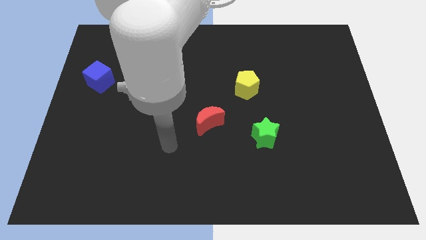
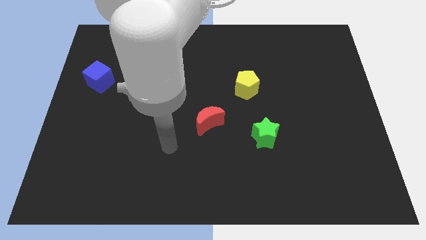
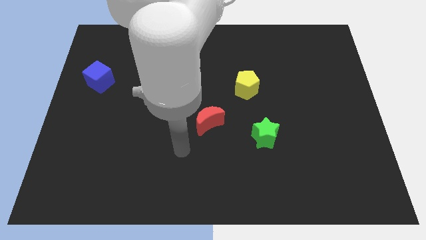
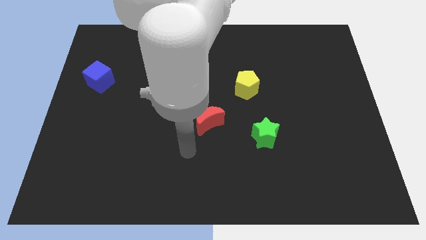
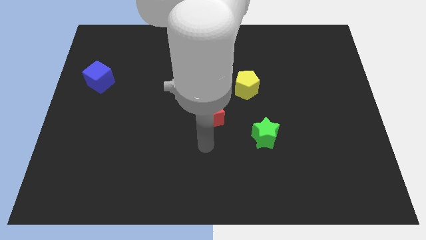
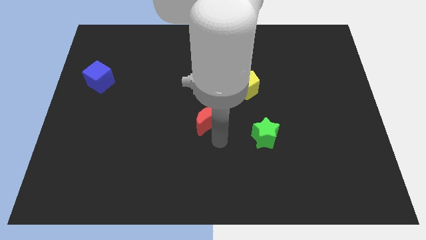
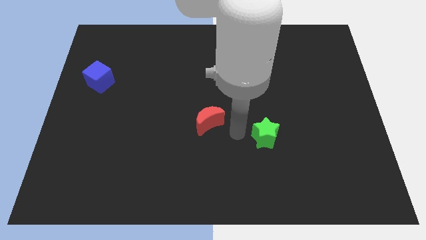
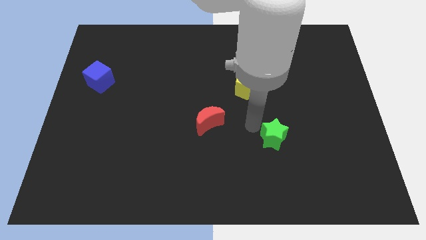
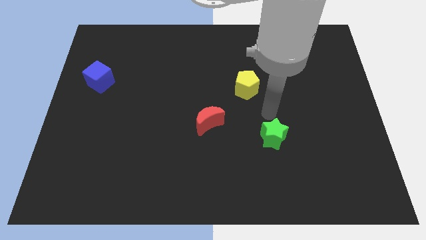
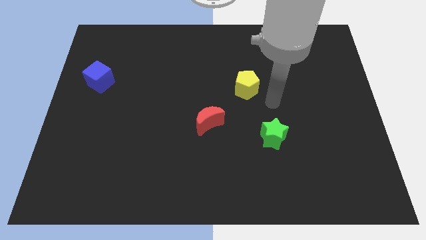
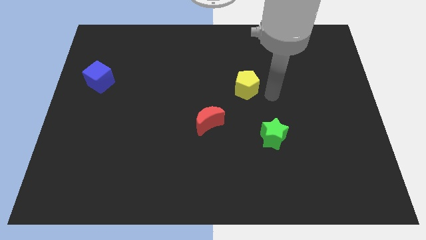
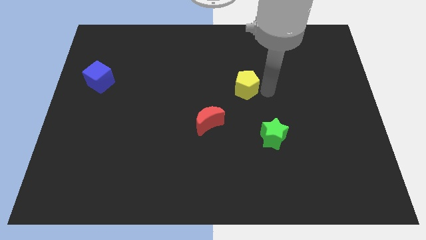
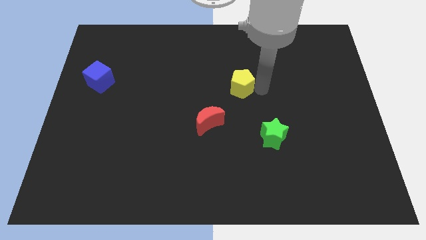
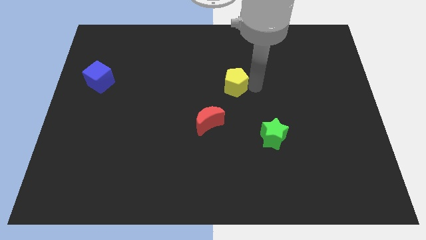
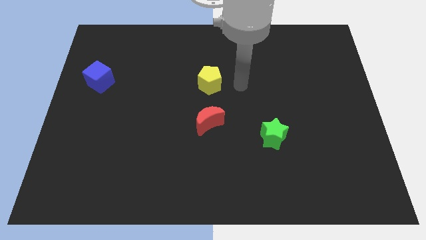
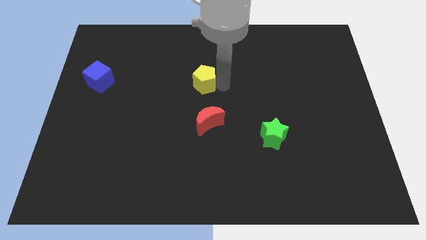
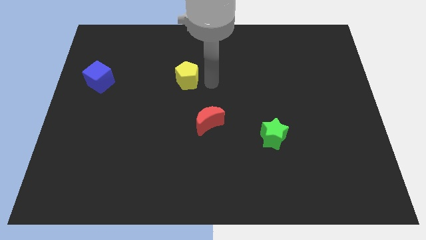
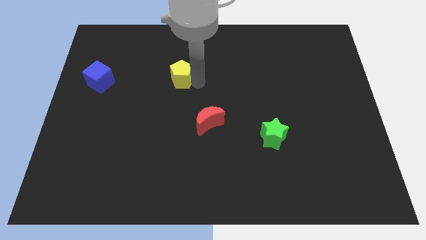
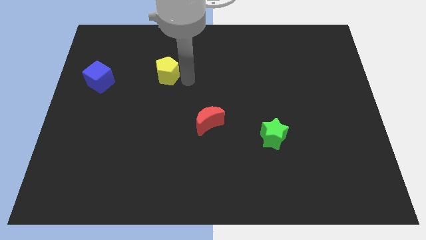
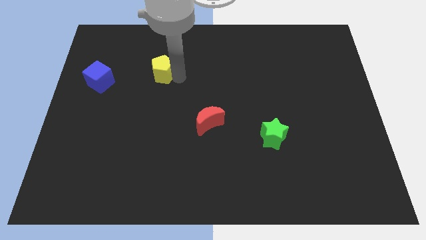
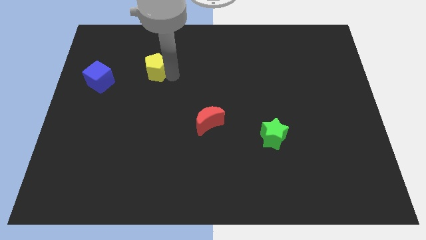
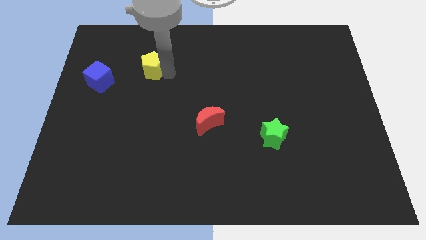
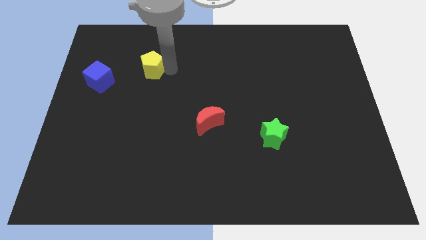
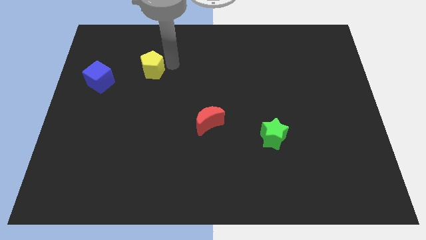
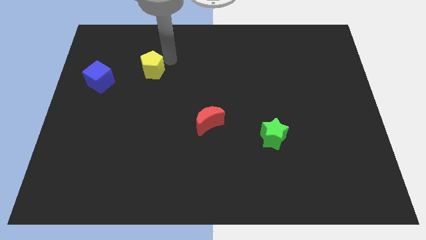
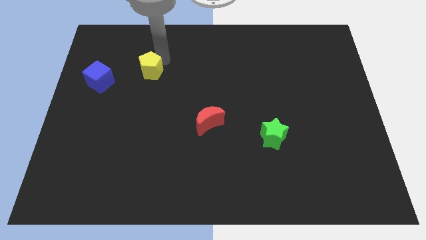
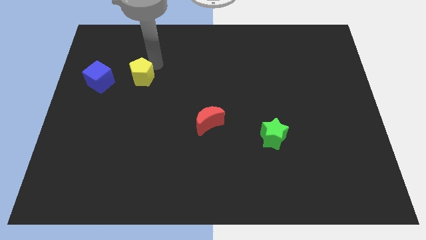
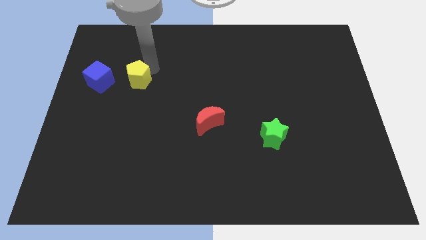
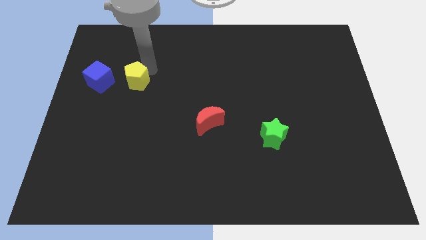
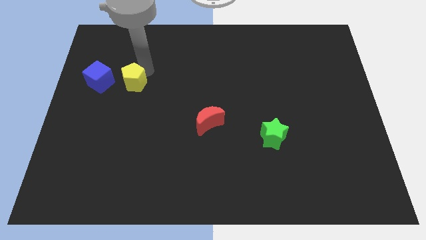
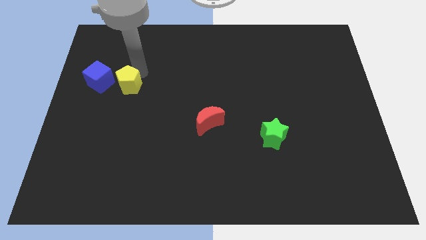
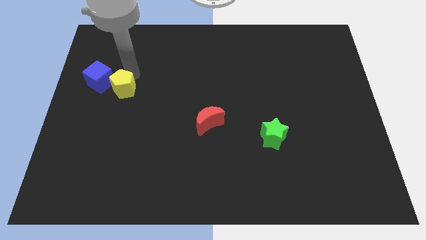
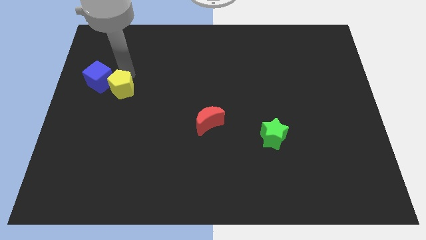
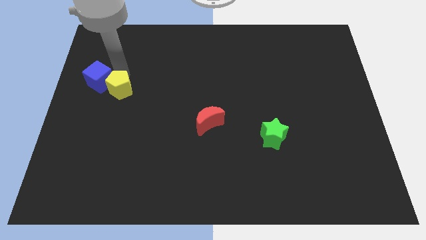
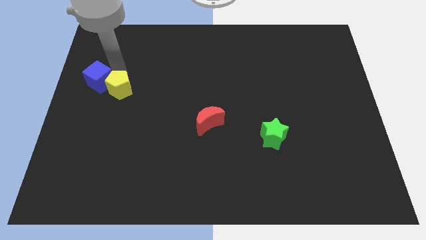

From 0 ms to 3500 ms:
slide the yellow pentagon to the blue block

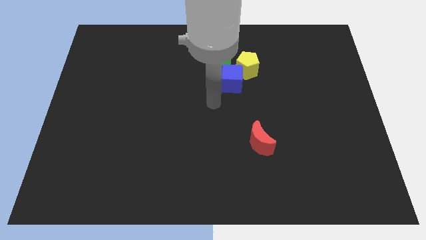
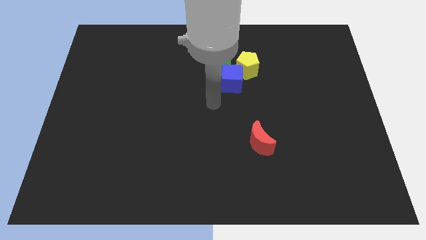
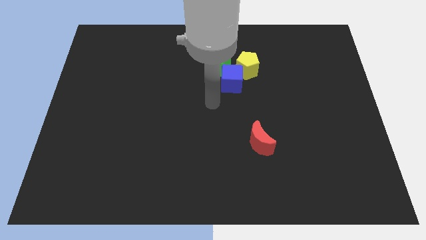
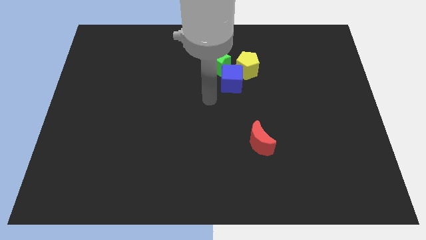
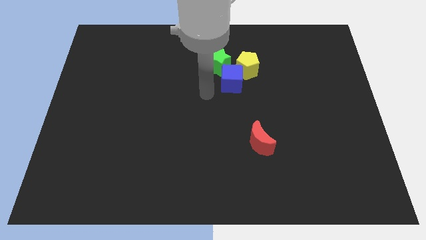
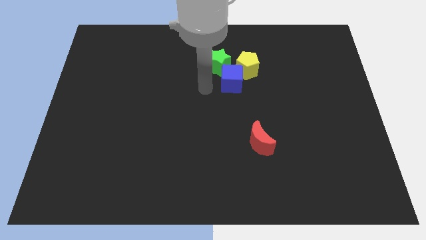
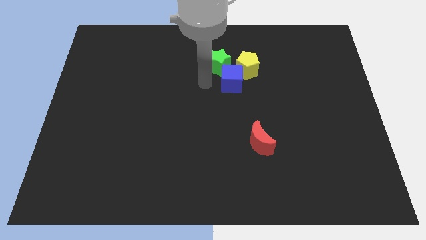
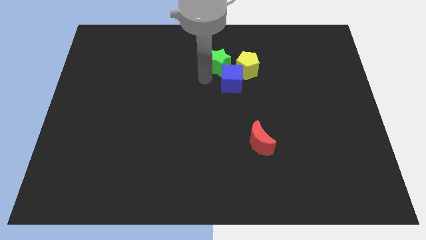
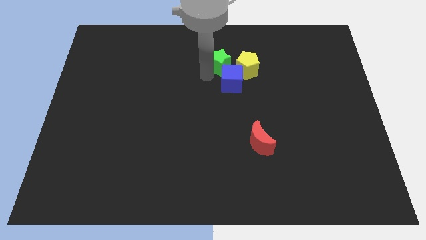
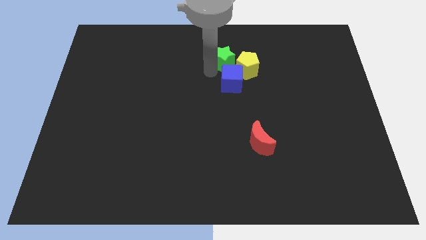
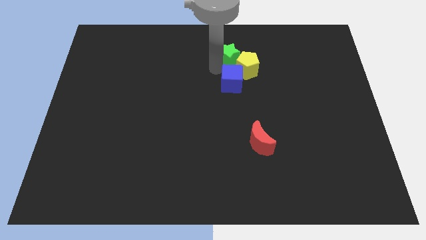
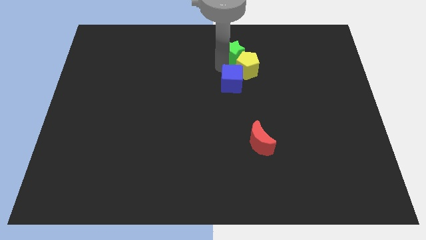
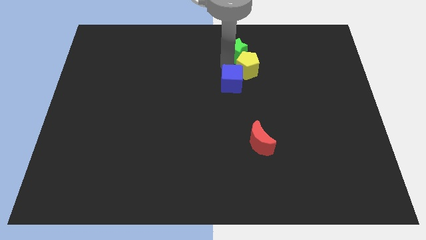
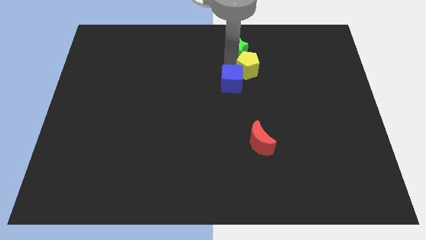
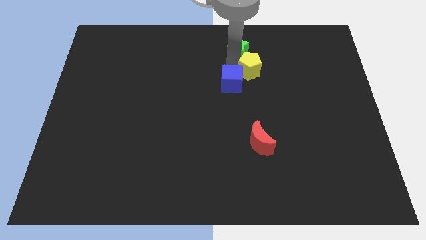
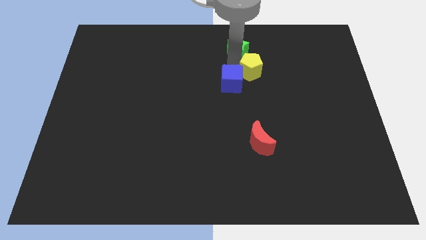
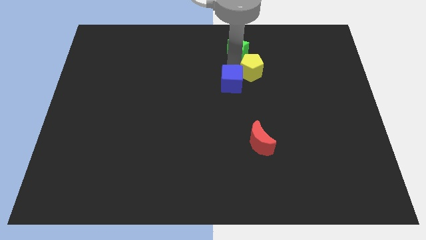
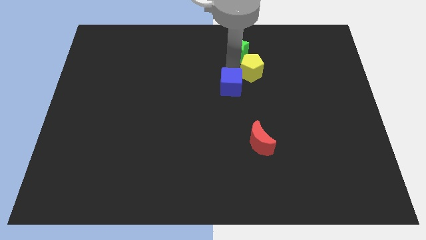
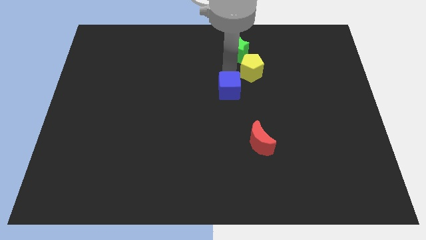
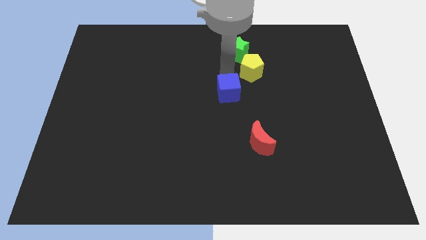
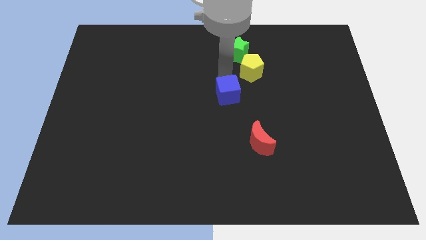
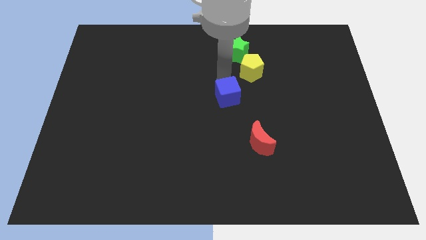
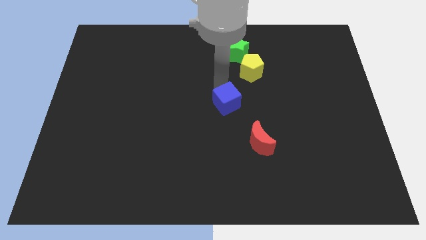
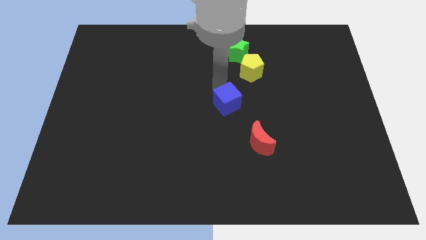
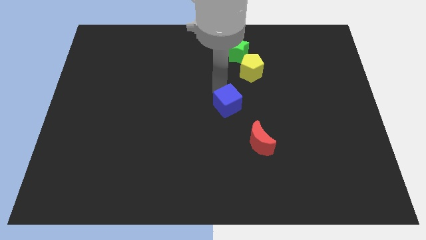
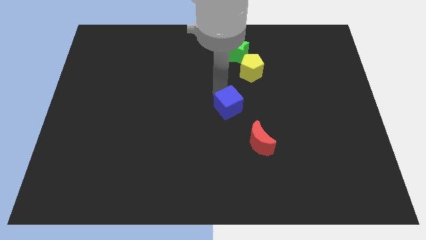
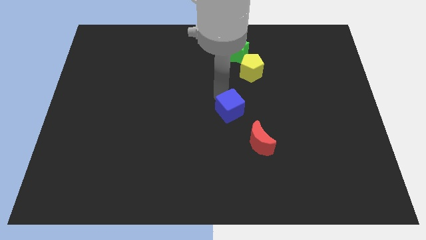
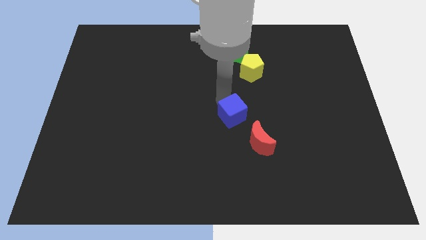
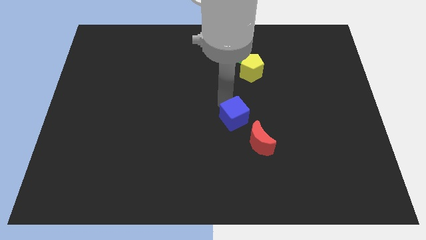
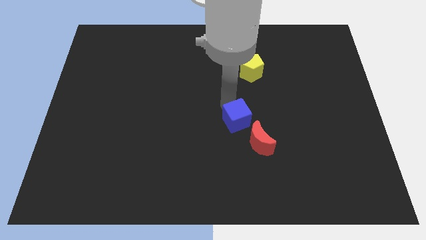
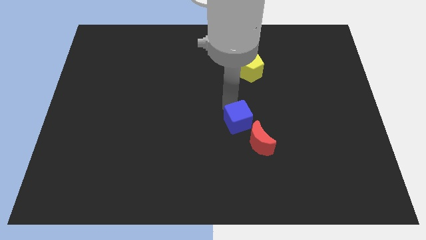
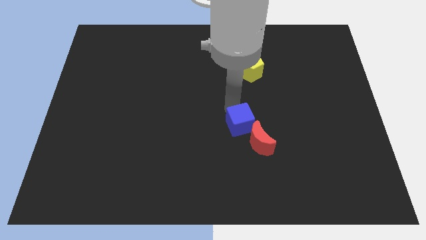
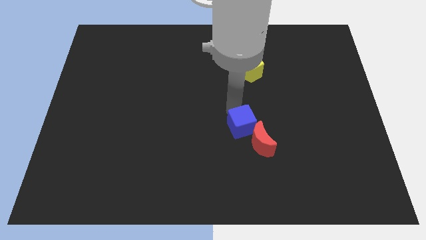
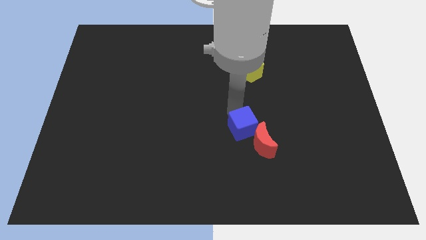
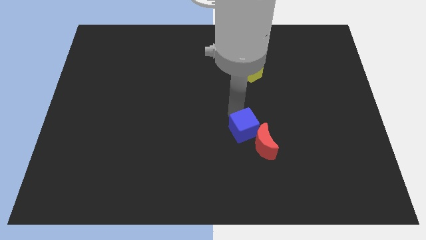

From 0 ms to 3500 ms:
move the blue cube towards the red block

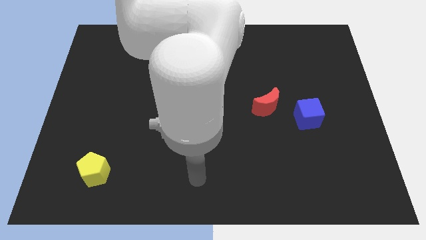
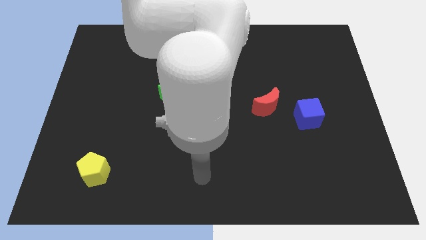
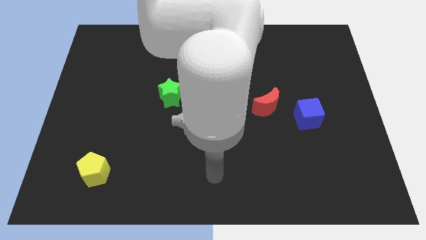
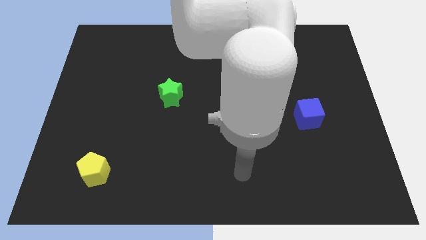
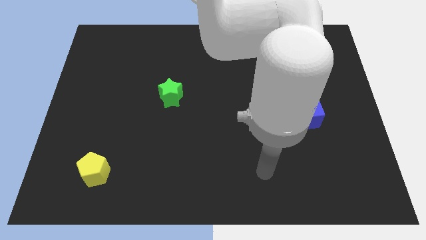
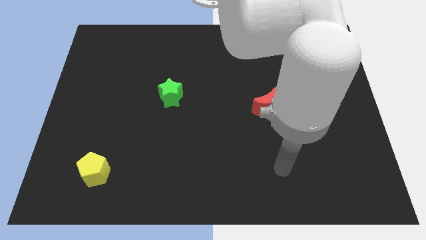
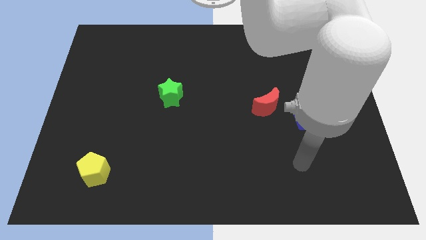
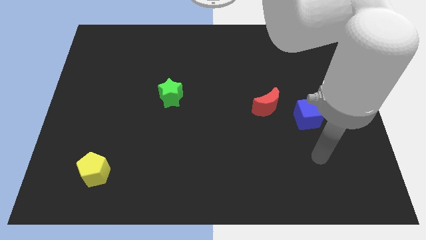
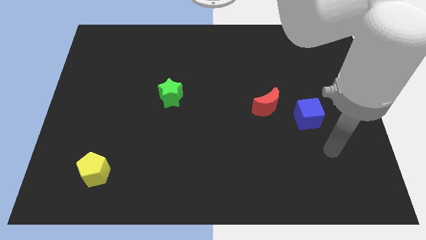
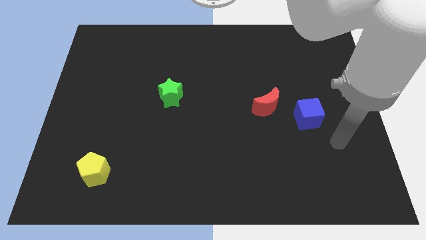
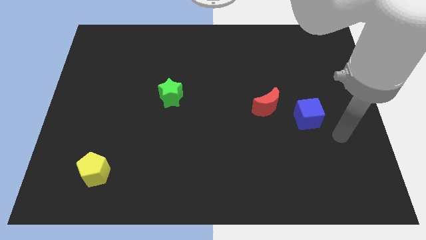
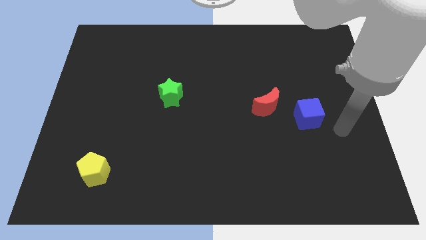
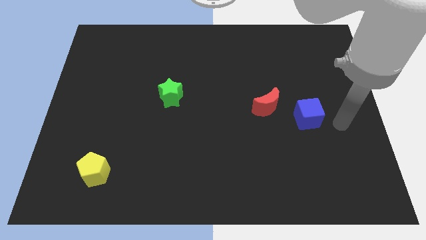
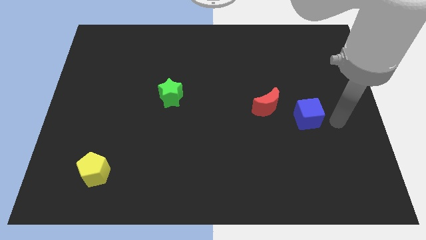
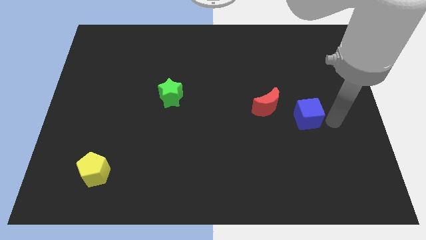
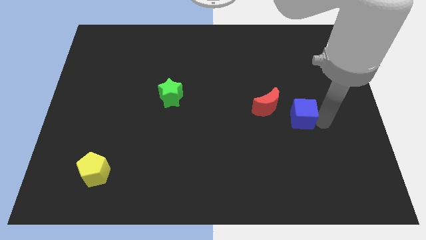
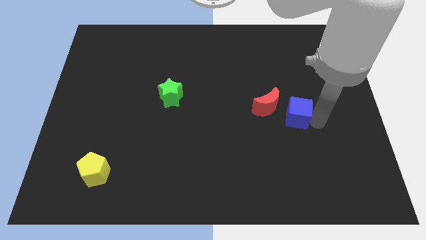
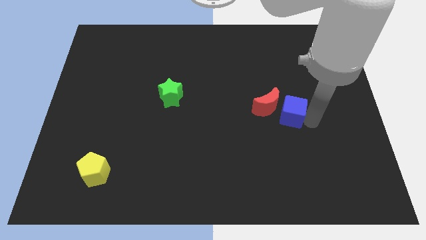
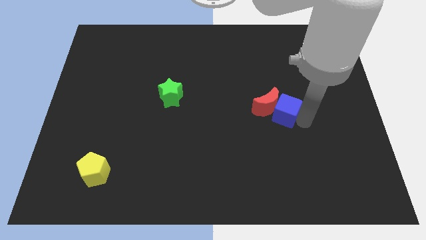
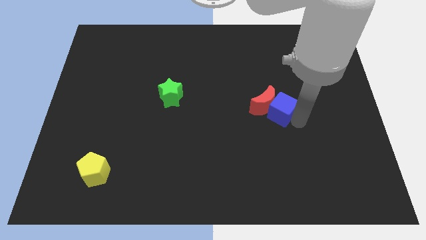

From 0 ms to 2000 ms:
push the cube close to the red block
